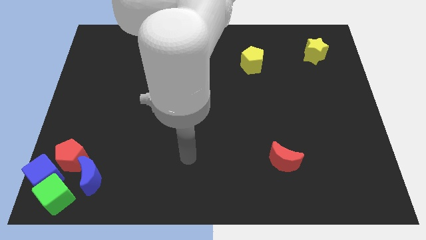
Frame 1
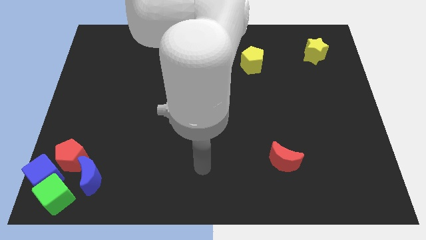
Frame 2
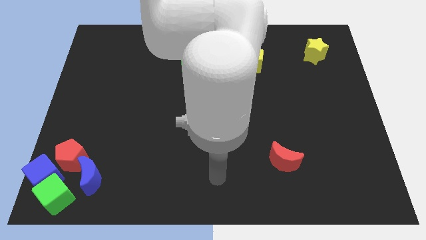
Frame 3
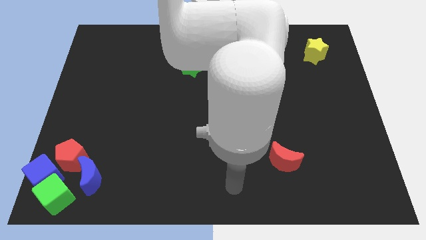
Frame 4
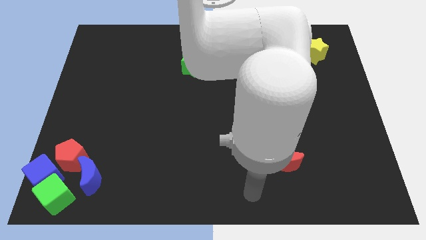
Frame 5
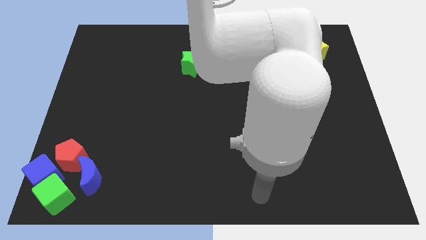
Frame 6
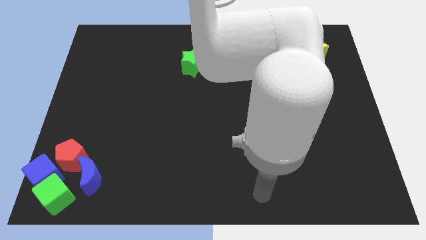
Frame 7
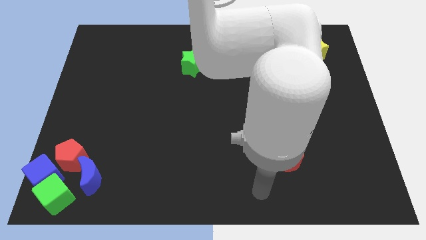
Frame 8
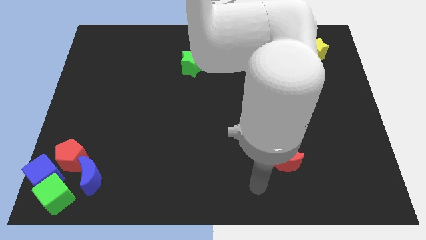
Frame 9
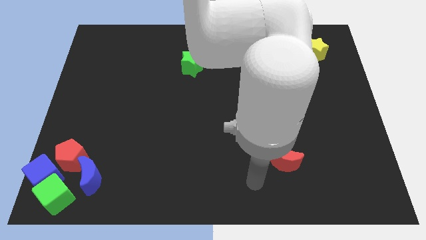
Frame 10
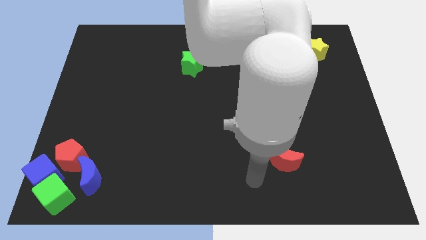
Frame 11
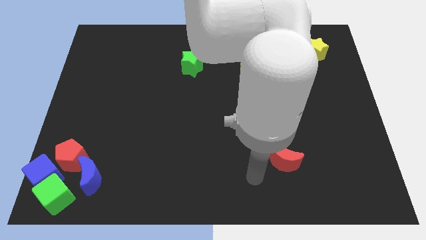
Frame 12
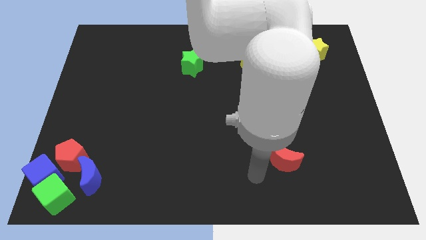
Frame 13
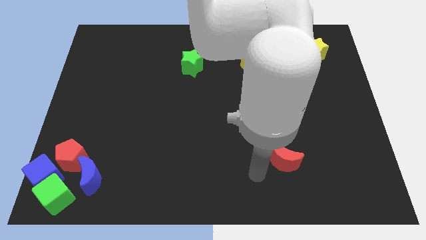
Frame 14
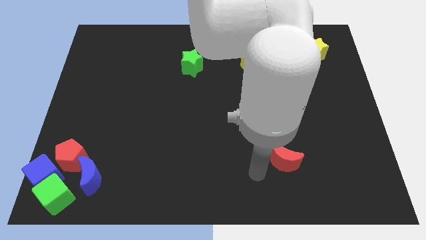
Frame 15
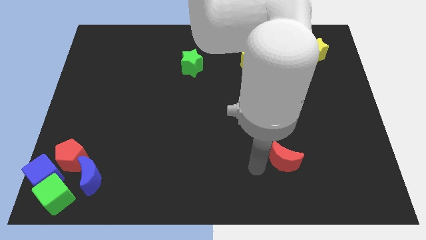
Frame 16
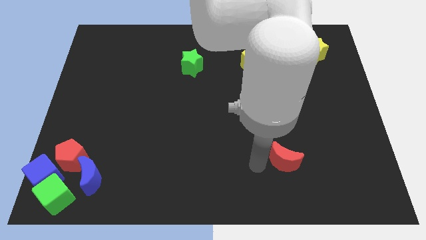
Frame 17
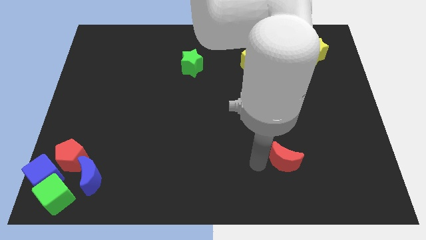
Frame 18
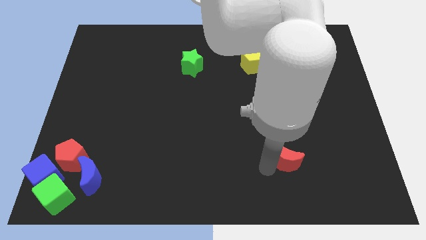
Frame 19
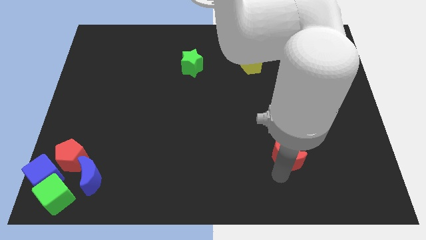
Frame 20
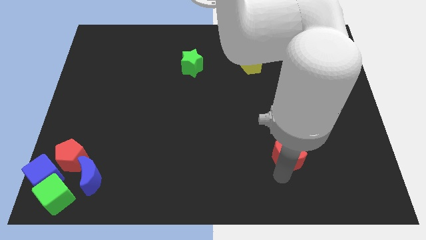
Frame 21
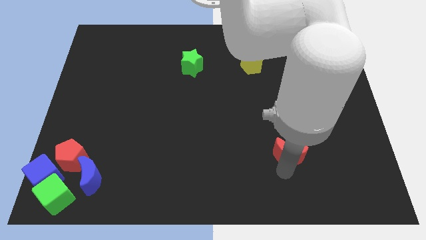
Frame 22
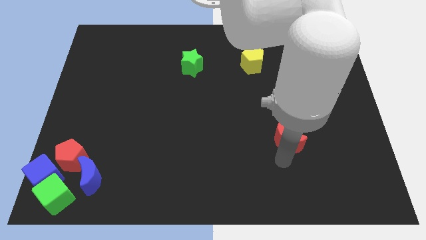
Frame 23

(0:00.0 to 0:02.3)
push the red crescent slightly to the top

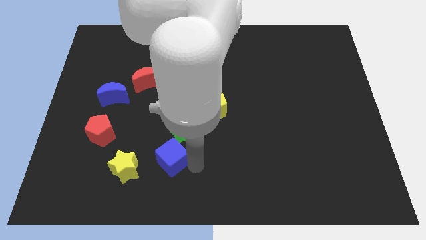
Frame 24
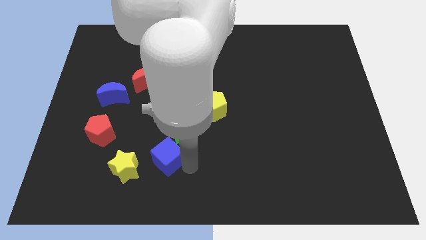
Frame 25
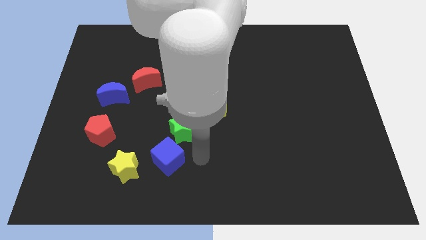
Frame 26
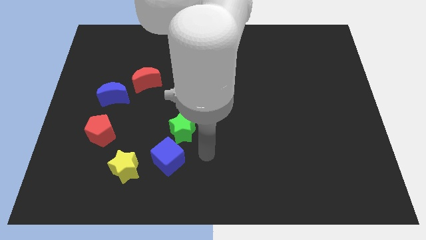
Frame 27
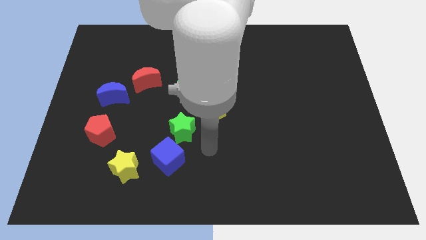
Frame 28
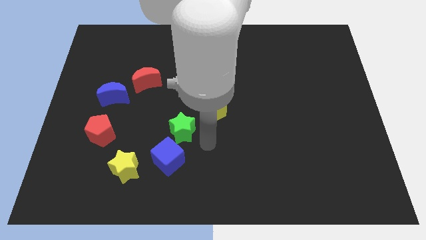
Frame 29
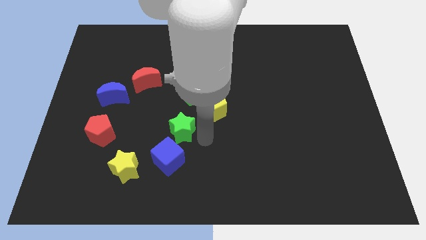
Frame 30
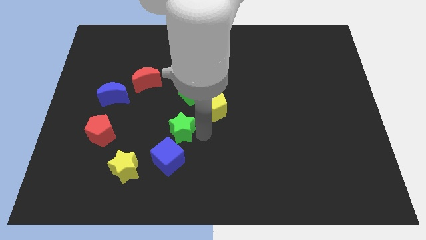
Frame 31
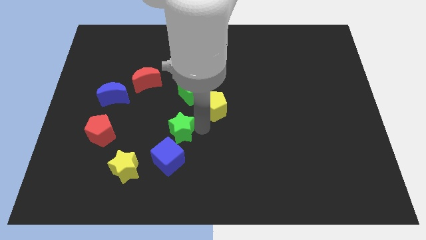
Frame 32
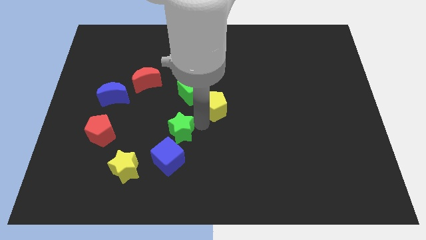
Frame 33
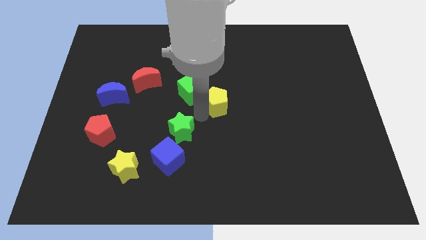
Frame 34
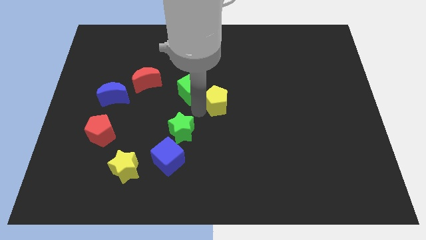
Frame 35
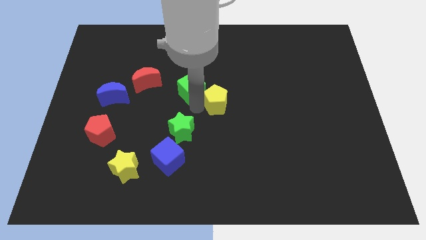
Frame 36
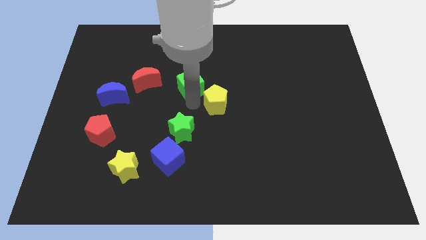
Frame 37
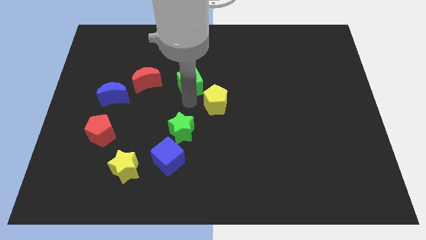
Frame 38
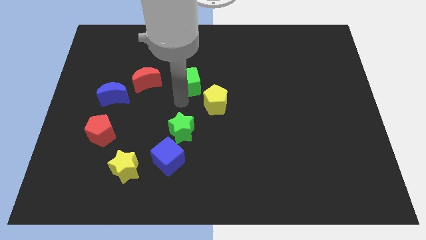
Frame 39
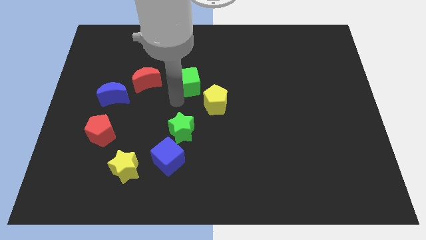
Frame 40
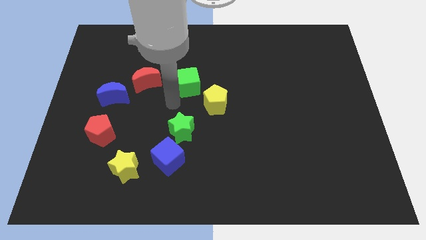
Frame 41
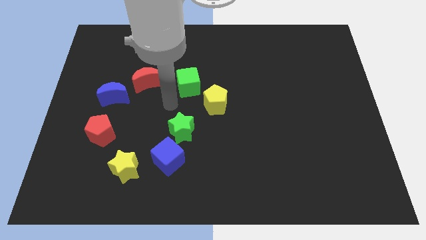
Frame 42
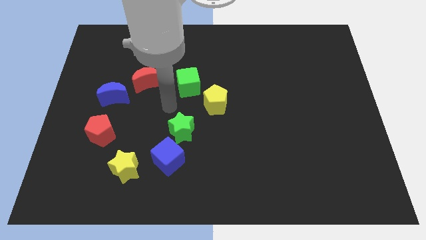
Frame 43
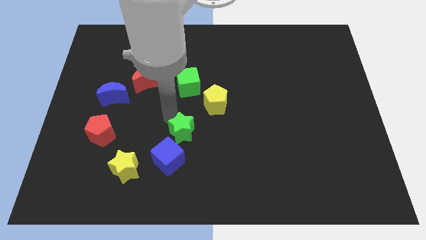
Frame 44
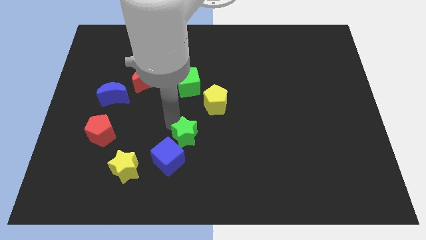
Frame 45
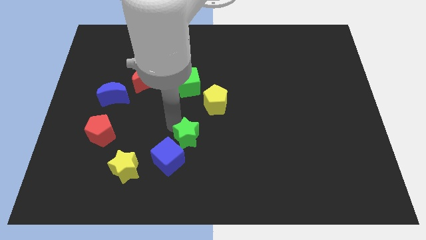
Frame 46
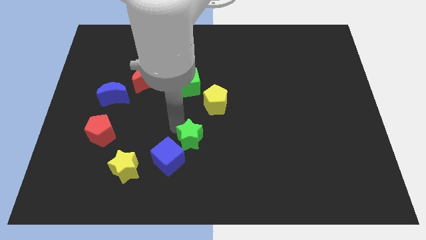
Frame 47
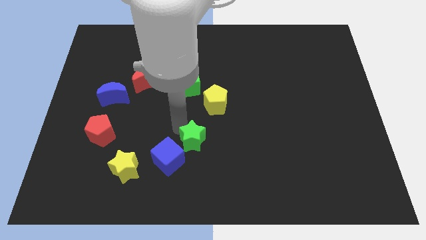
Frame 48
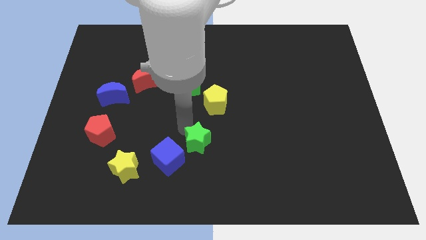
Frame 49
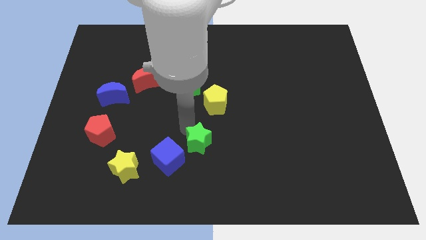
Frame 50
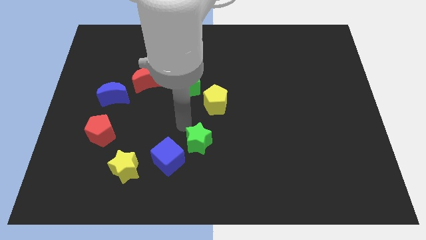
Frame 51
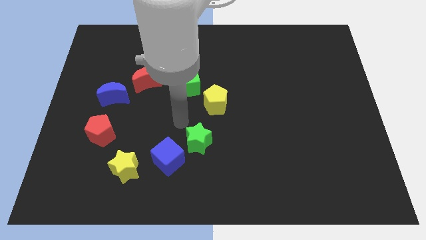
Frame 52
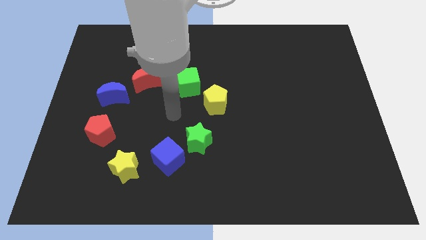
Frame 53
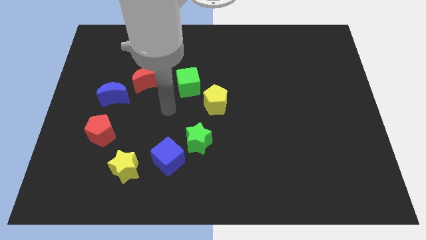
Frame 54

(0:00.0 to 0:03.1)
adjust the green cube and green star diagonally

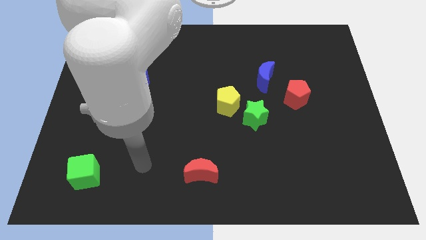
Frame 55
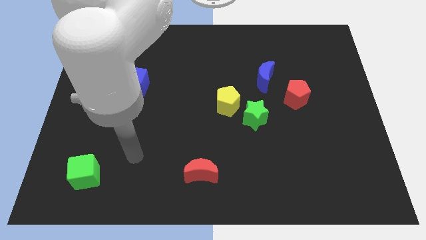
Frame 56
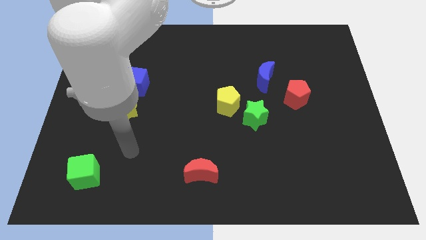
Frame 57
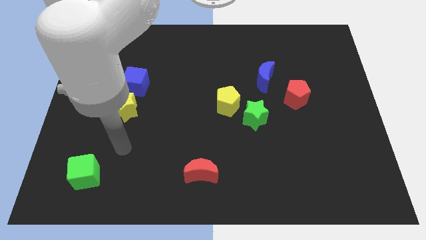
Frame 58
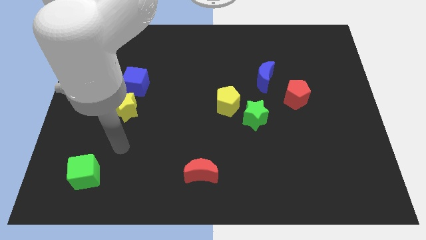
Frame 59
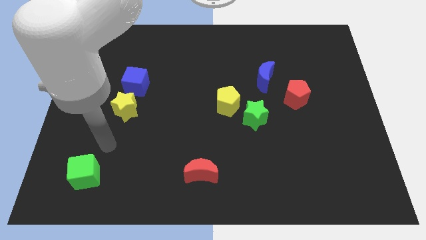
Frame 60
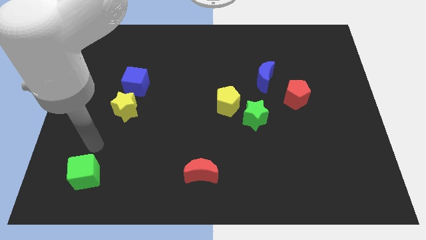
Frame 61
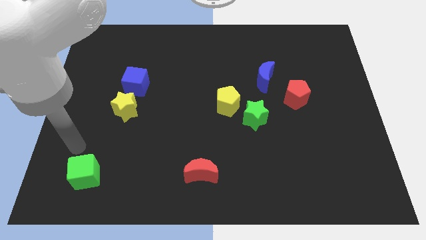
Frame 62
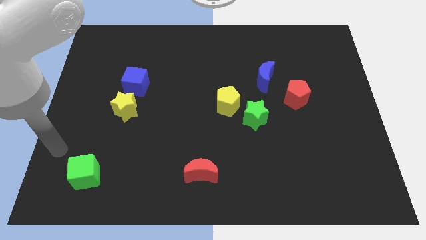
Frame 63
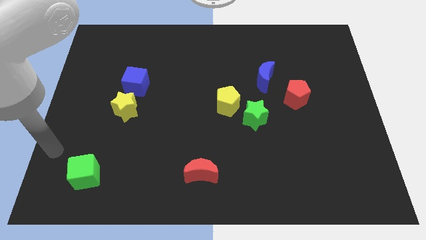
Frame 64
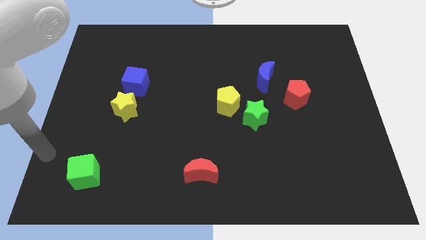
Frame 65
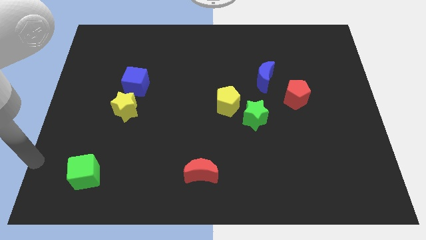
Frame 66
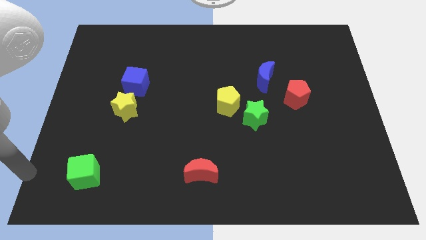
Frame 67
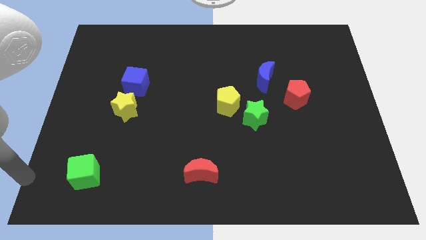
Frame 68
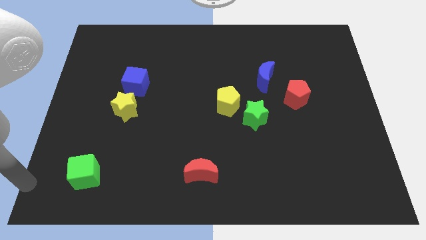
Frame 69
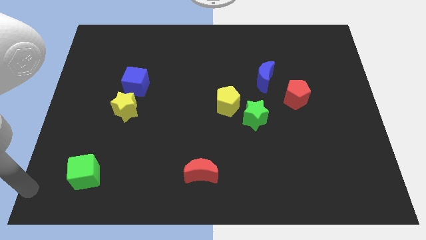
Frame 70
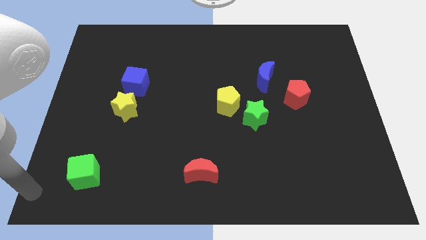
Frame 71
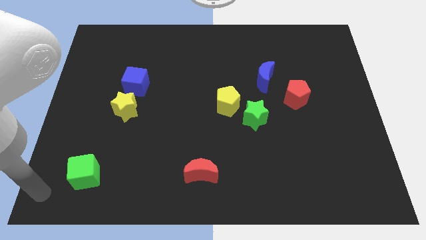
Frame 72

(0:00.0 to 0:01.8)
move your hand to the bottom left

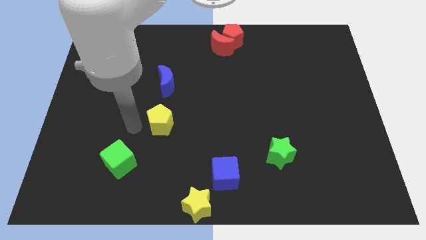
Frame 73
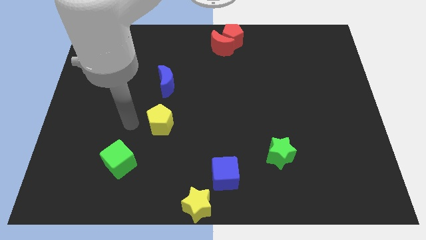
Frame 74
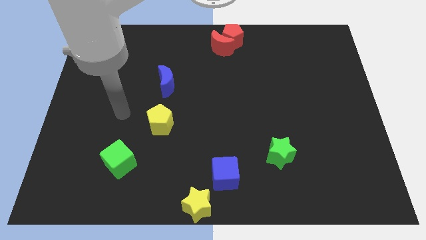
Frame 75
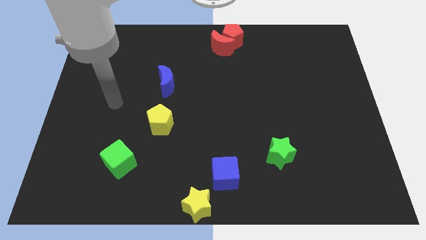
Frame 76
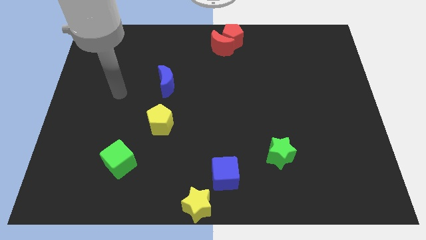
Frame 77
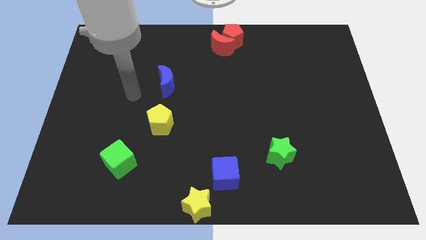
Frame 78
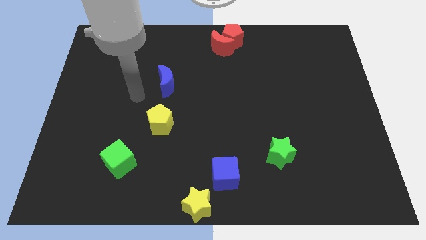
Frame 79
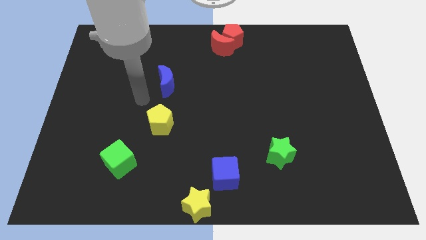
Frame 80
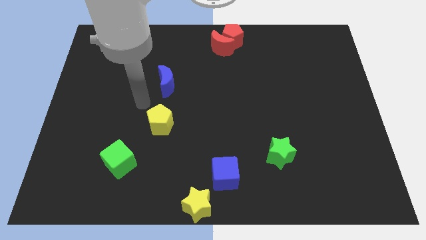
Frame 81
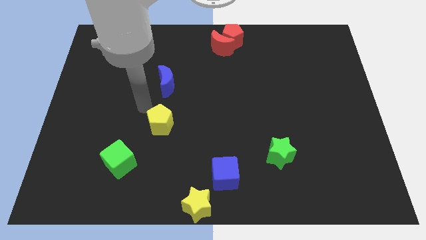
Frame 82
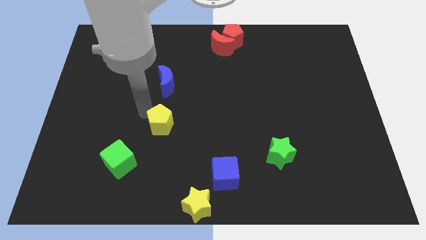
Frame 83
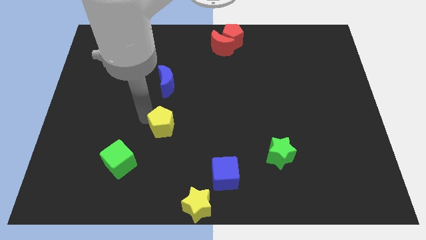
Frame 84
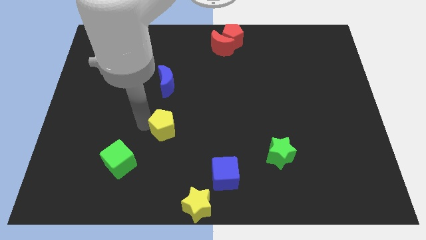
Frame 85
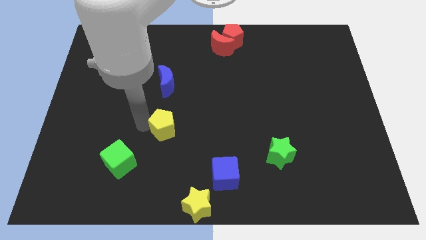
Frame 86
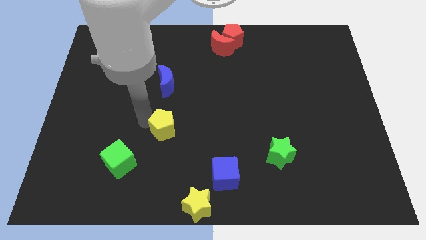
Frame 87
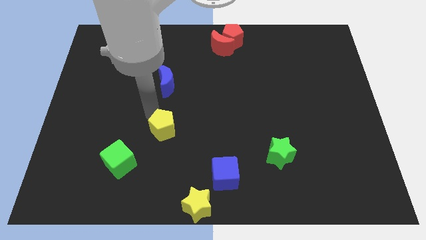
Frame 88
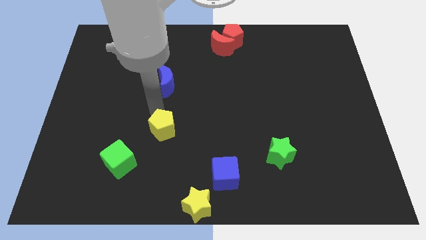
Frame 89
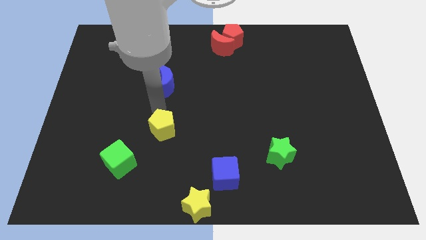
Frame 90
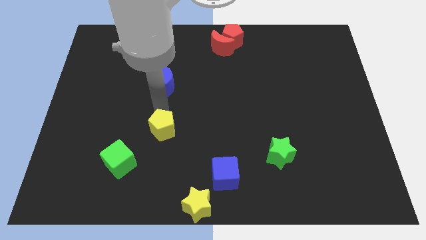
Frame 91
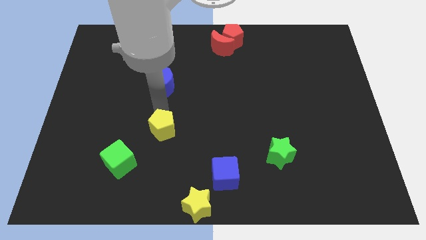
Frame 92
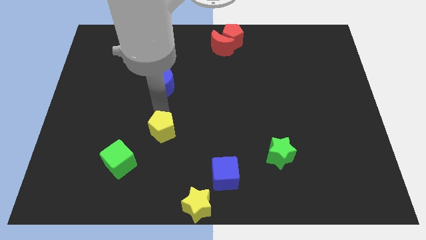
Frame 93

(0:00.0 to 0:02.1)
slightly move yellow pentagon towards the yellow star
